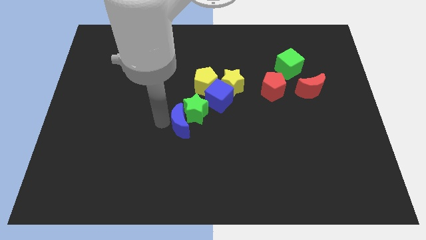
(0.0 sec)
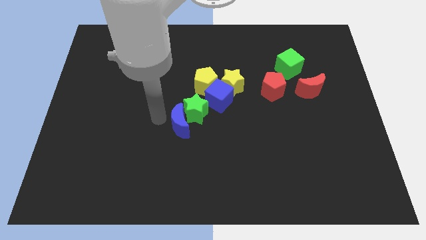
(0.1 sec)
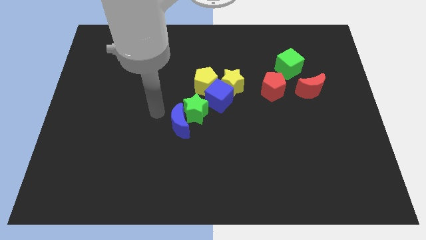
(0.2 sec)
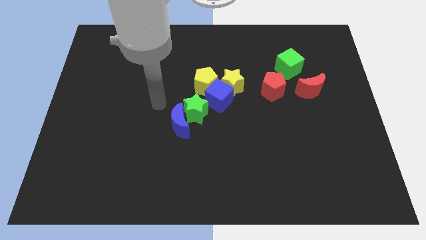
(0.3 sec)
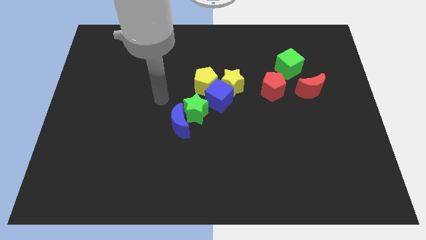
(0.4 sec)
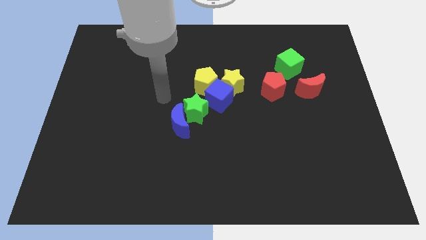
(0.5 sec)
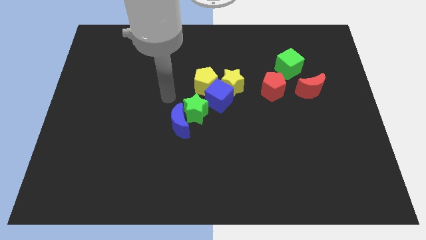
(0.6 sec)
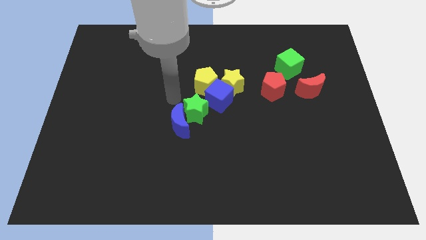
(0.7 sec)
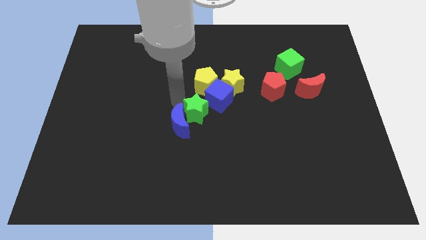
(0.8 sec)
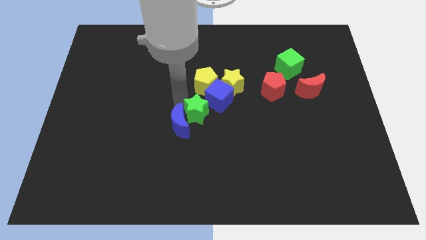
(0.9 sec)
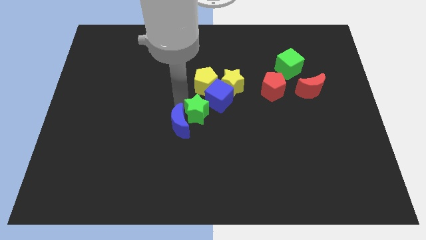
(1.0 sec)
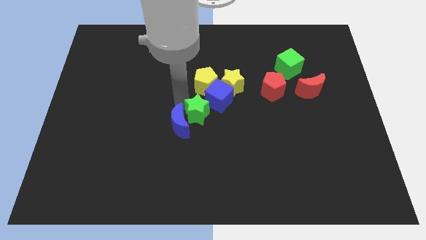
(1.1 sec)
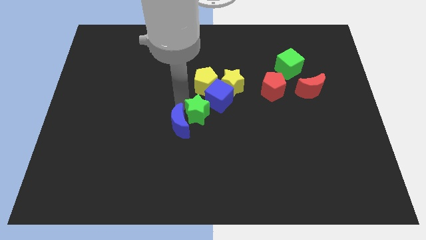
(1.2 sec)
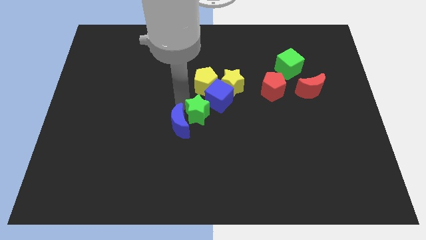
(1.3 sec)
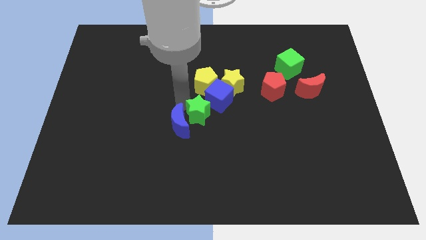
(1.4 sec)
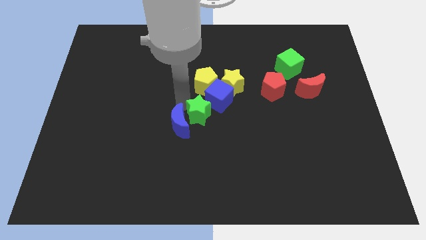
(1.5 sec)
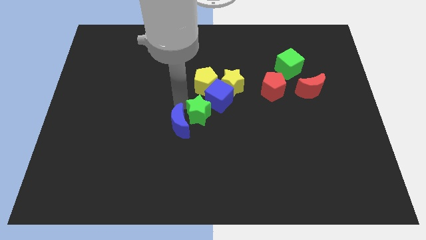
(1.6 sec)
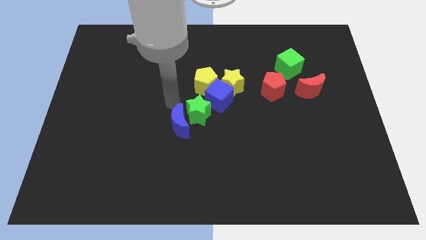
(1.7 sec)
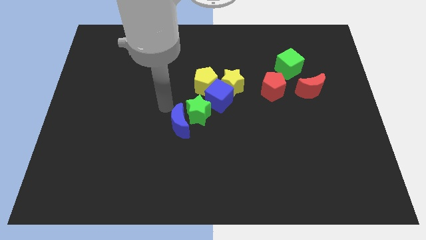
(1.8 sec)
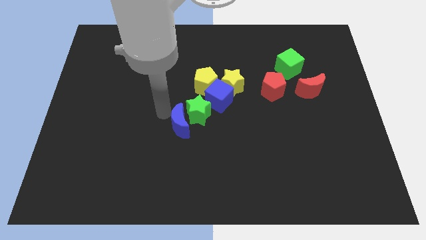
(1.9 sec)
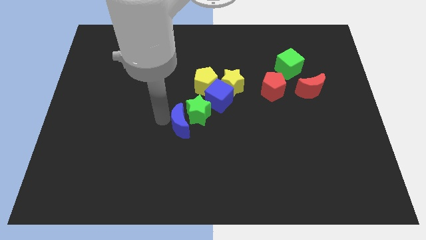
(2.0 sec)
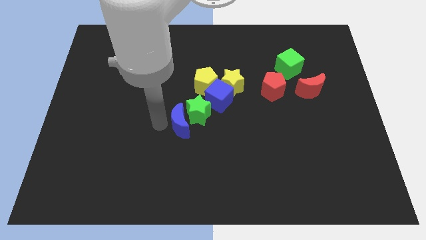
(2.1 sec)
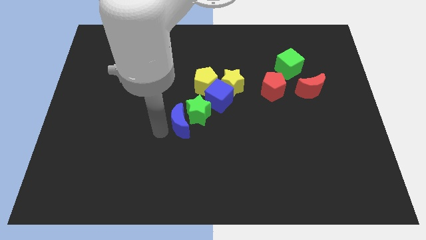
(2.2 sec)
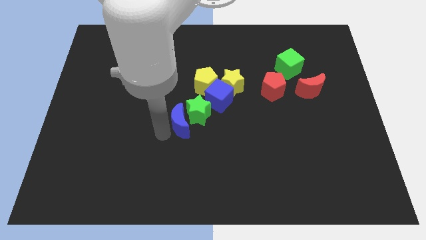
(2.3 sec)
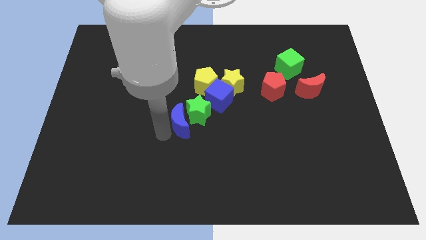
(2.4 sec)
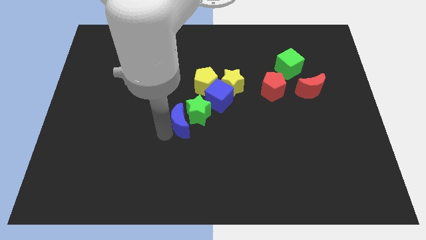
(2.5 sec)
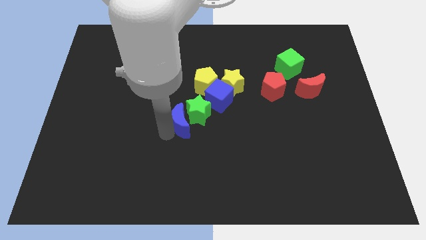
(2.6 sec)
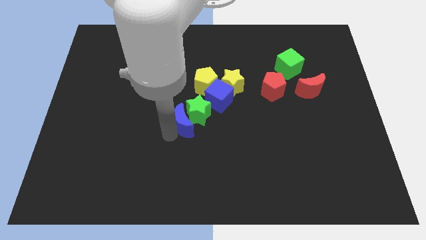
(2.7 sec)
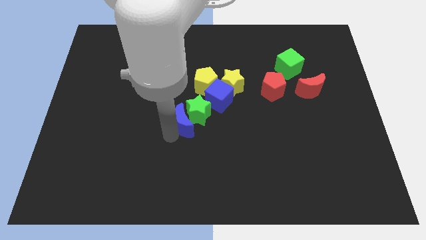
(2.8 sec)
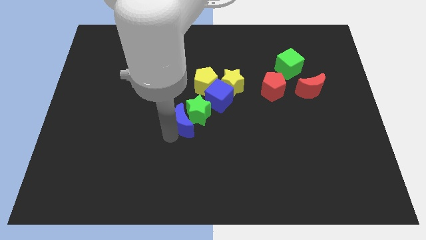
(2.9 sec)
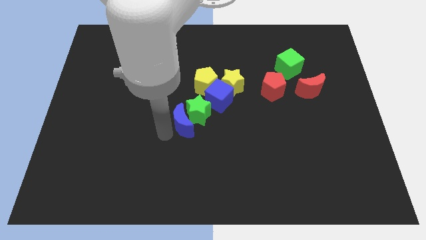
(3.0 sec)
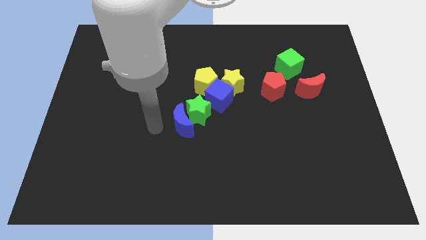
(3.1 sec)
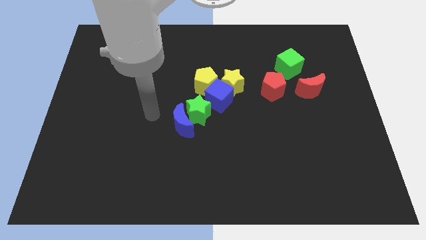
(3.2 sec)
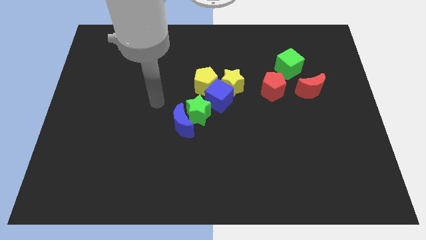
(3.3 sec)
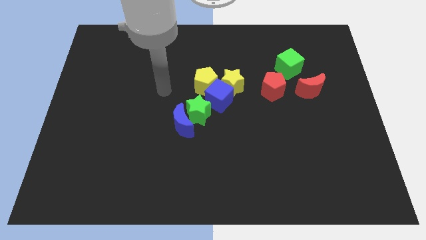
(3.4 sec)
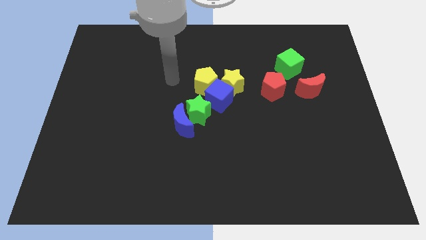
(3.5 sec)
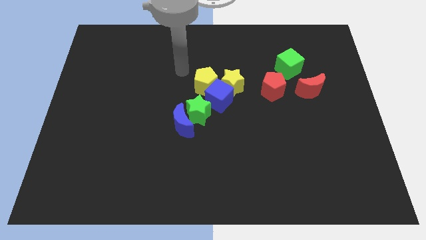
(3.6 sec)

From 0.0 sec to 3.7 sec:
slightly push the green star towards the blue crescent

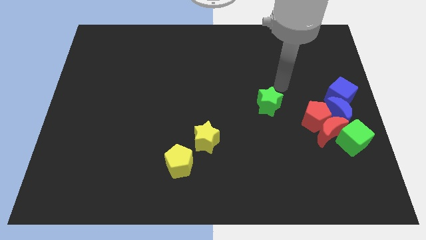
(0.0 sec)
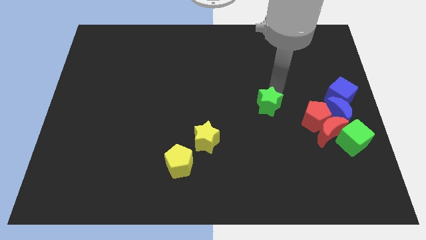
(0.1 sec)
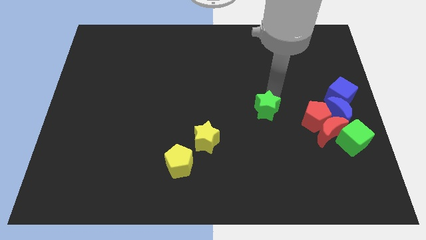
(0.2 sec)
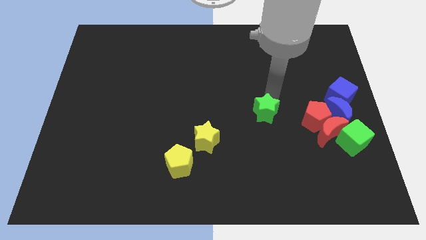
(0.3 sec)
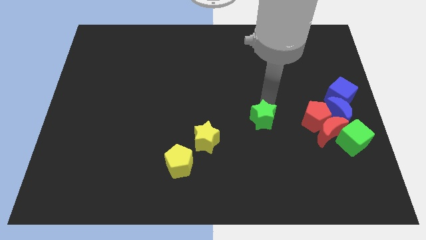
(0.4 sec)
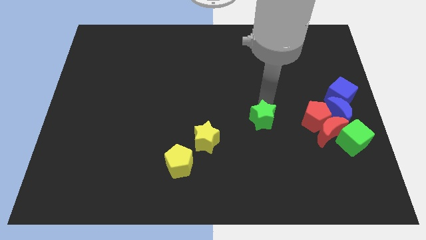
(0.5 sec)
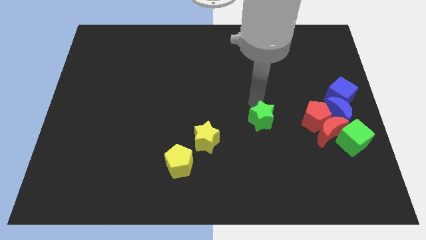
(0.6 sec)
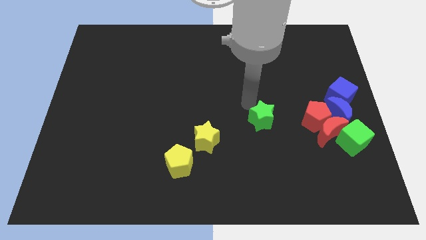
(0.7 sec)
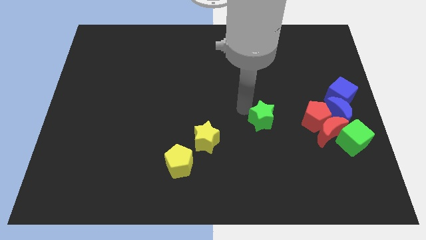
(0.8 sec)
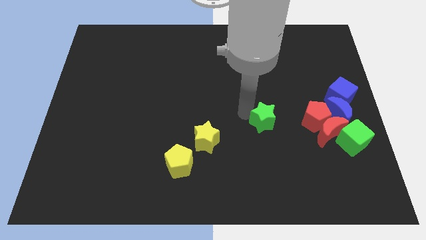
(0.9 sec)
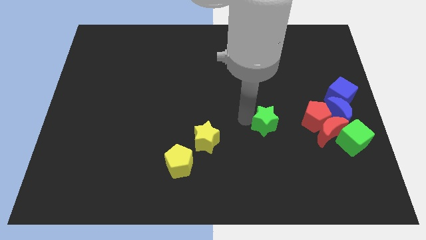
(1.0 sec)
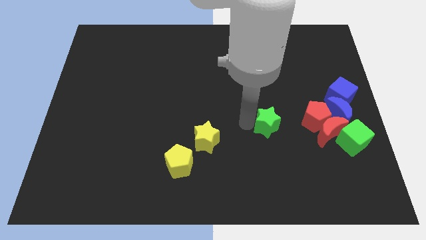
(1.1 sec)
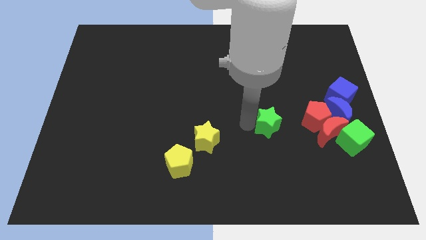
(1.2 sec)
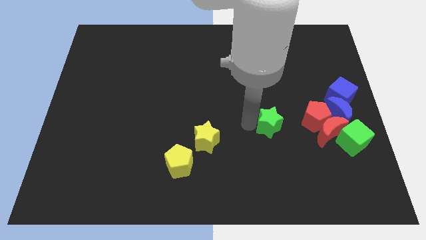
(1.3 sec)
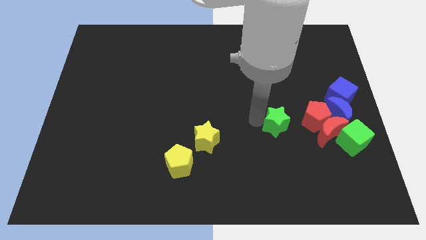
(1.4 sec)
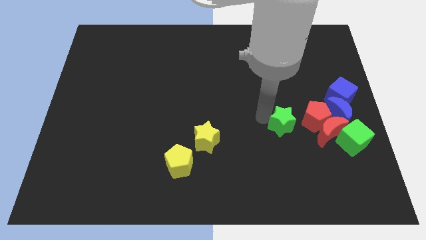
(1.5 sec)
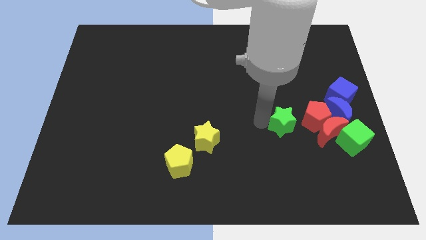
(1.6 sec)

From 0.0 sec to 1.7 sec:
push the green star to the left of the red blocks

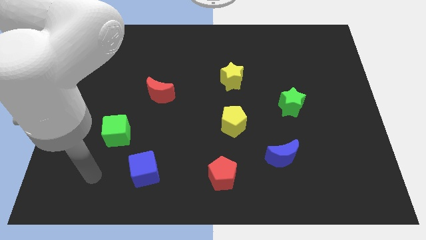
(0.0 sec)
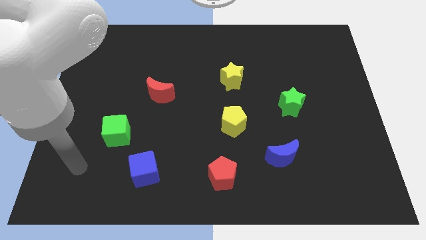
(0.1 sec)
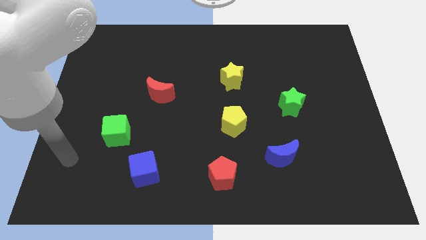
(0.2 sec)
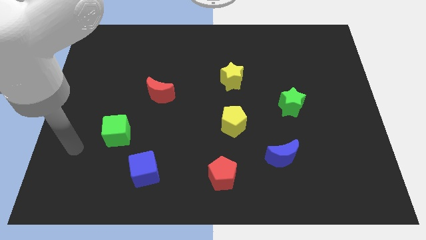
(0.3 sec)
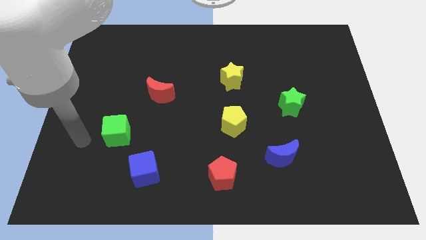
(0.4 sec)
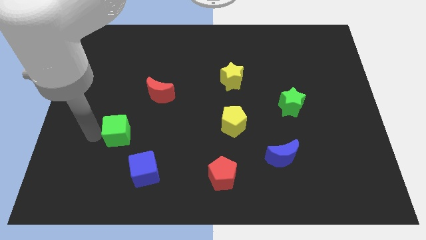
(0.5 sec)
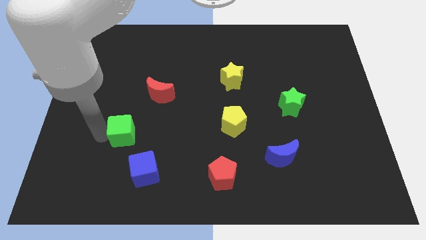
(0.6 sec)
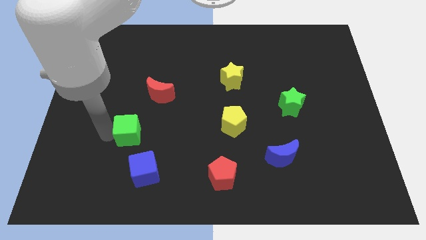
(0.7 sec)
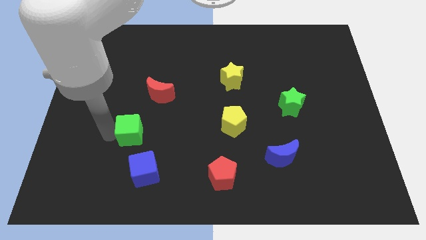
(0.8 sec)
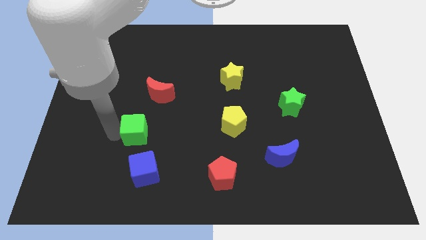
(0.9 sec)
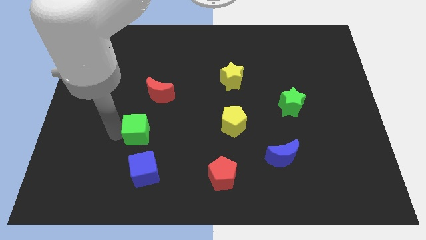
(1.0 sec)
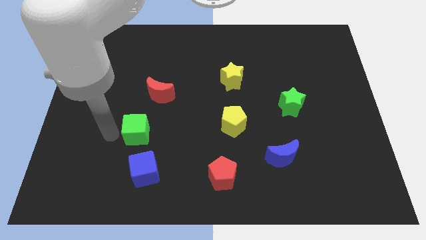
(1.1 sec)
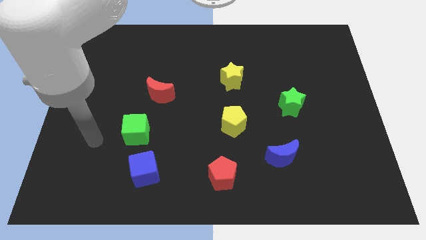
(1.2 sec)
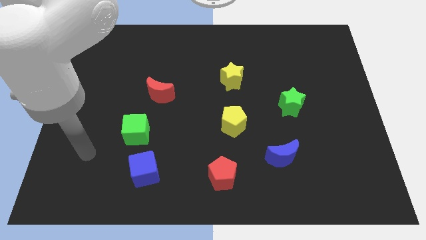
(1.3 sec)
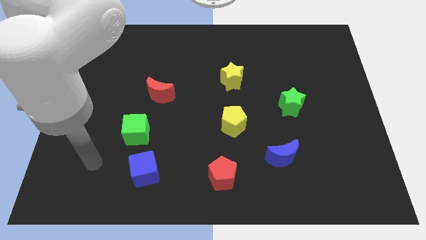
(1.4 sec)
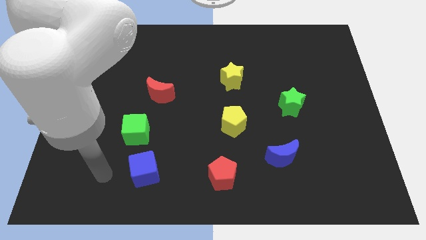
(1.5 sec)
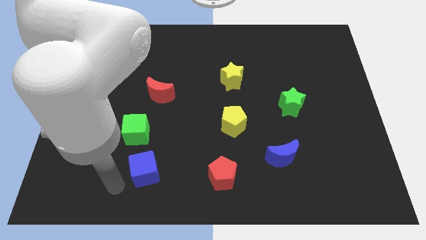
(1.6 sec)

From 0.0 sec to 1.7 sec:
move the green cube to the top of the blue cube

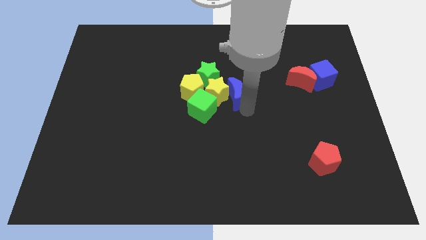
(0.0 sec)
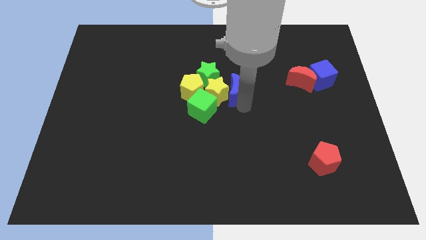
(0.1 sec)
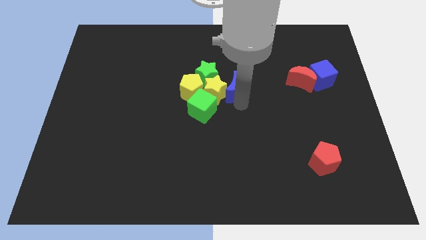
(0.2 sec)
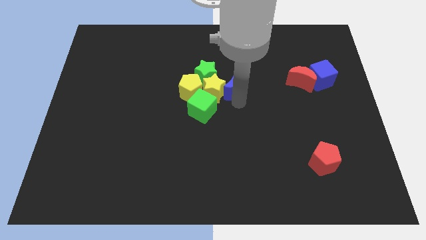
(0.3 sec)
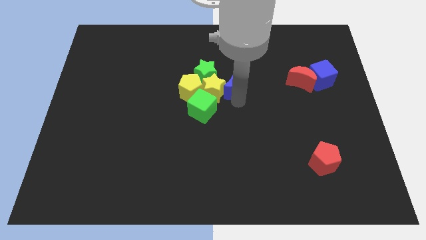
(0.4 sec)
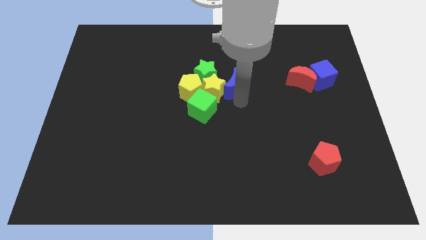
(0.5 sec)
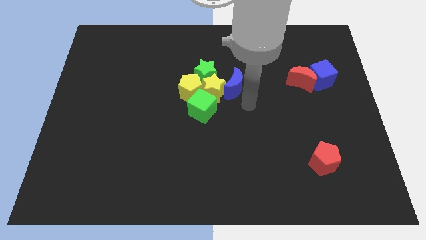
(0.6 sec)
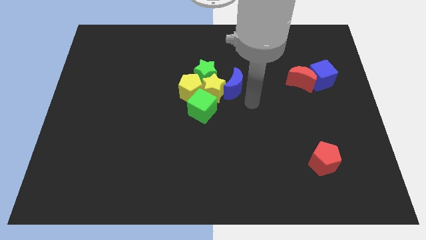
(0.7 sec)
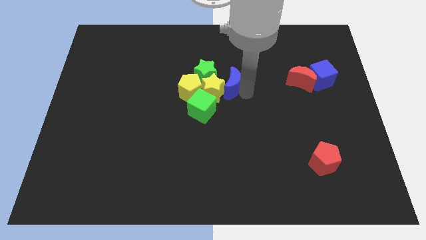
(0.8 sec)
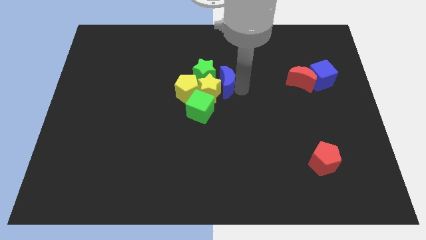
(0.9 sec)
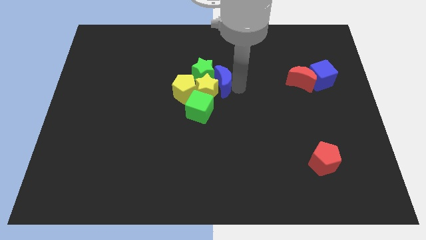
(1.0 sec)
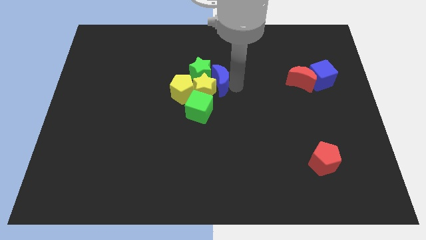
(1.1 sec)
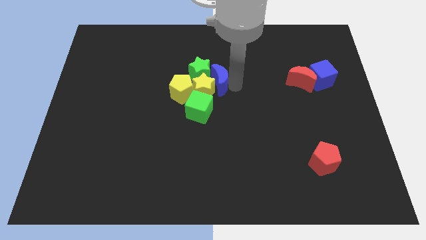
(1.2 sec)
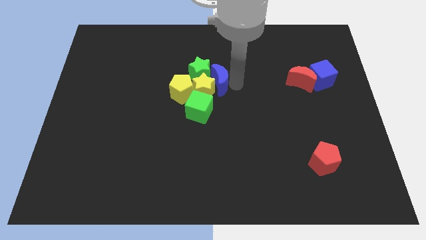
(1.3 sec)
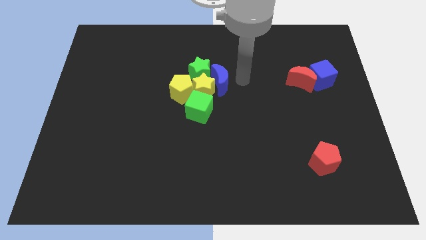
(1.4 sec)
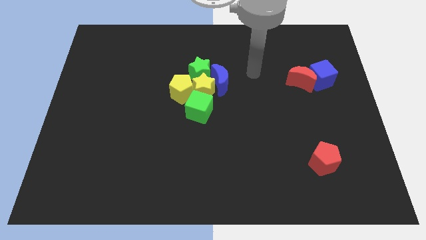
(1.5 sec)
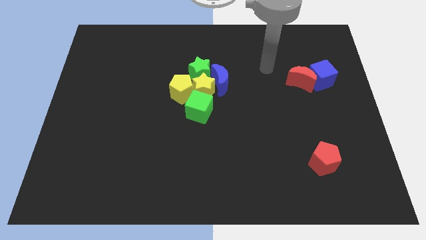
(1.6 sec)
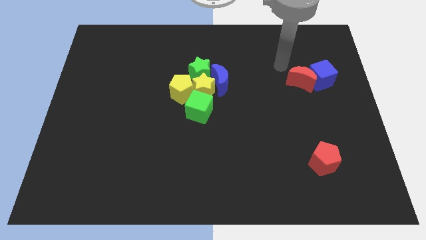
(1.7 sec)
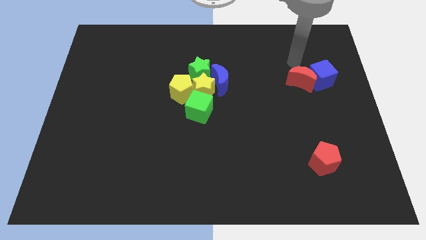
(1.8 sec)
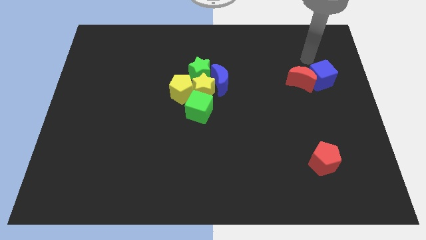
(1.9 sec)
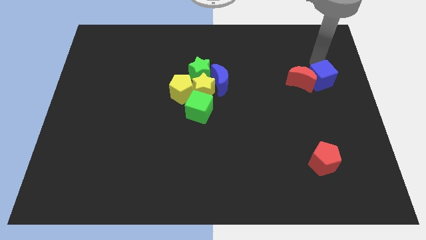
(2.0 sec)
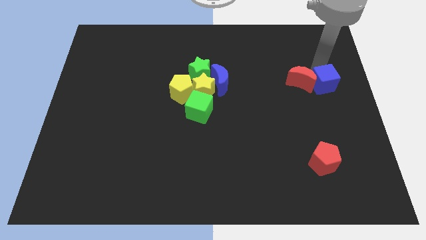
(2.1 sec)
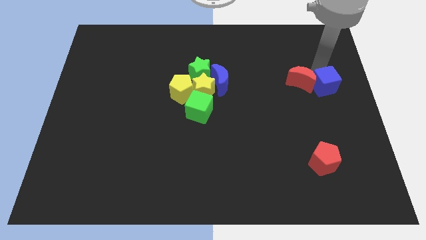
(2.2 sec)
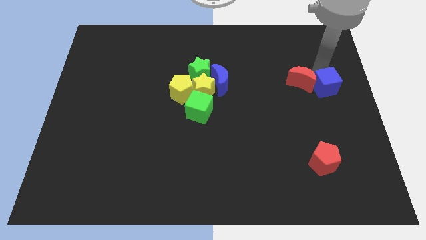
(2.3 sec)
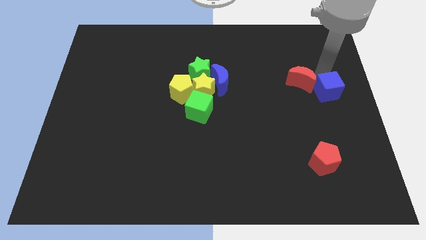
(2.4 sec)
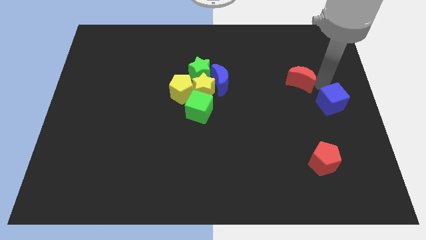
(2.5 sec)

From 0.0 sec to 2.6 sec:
go near blue cube
